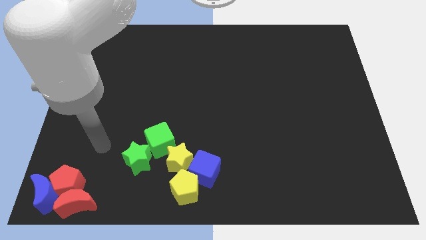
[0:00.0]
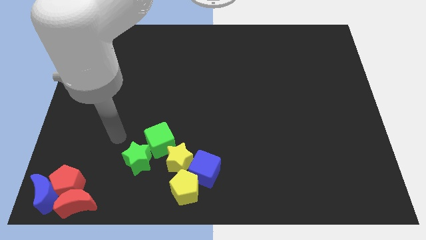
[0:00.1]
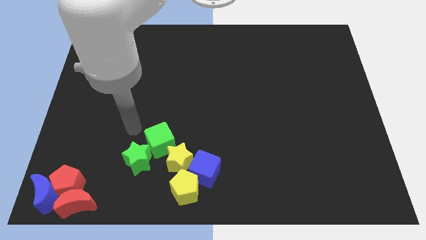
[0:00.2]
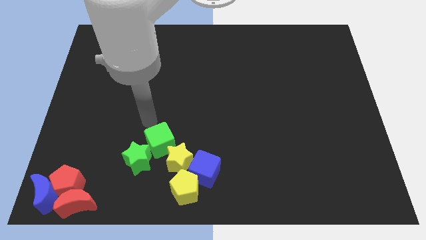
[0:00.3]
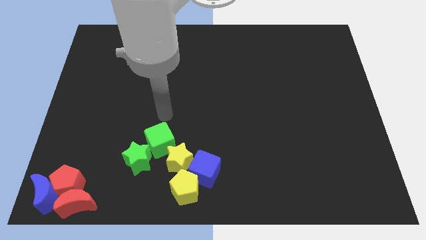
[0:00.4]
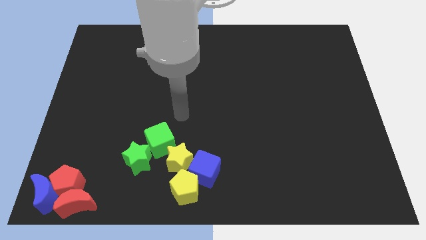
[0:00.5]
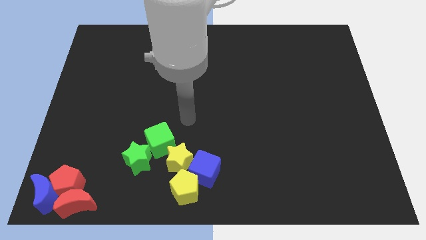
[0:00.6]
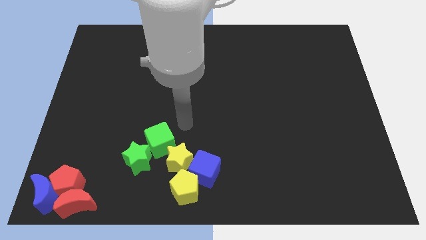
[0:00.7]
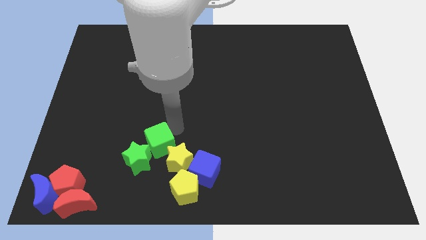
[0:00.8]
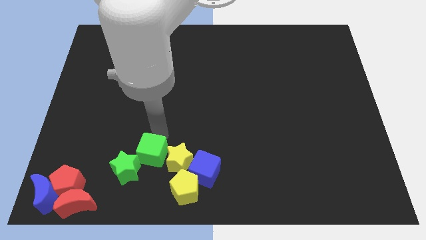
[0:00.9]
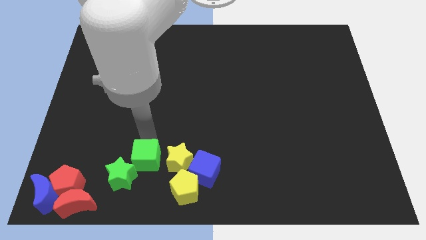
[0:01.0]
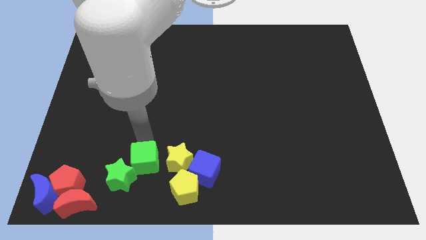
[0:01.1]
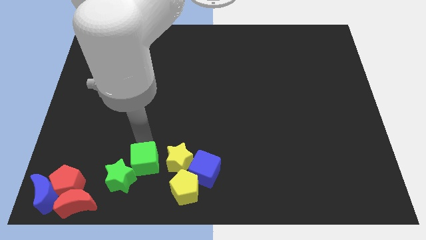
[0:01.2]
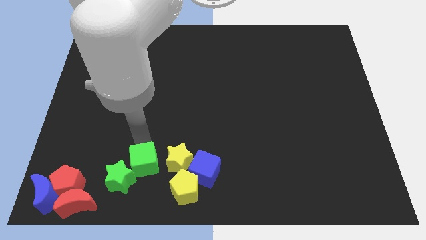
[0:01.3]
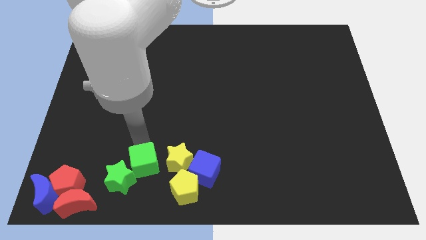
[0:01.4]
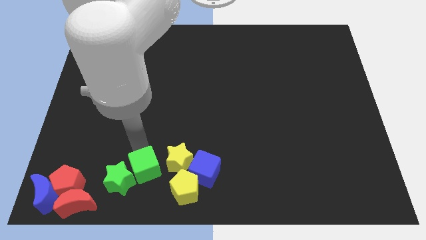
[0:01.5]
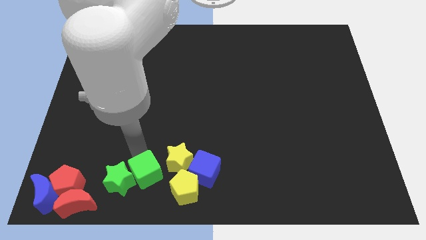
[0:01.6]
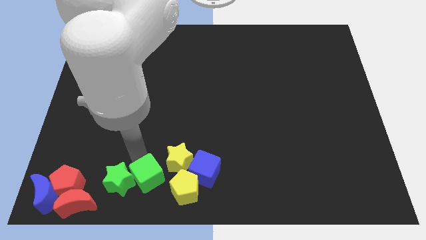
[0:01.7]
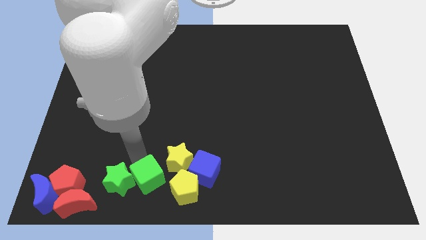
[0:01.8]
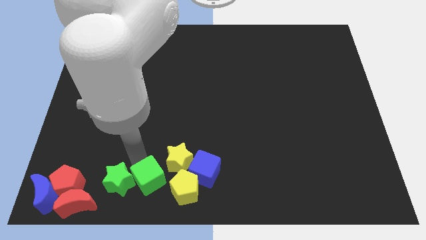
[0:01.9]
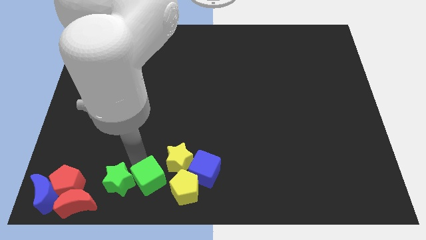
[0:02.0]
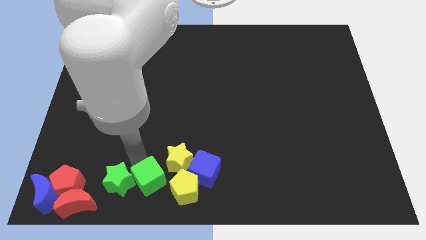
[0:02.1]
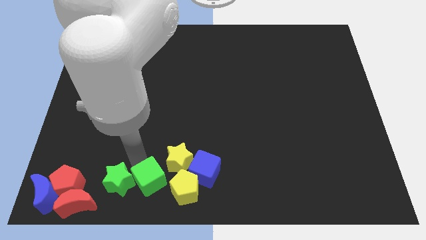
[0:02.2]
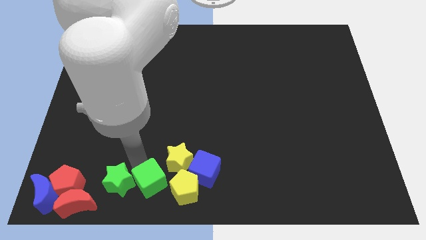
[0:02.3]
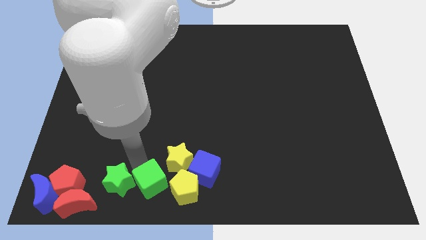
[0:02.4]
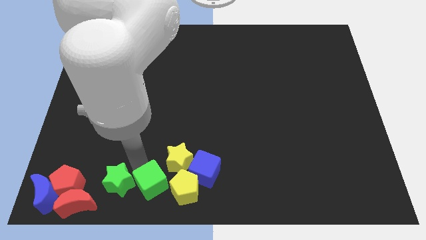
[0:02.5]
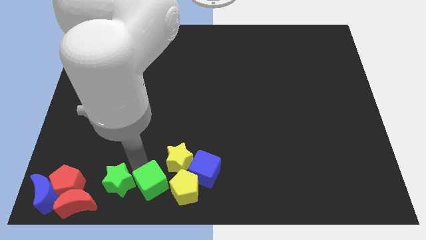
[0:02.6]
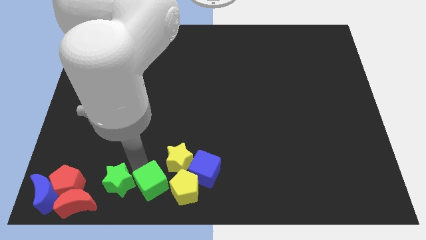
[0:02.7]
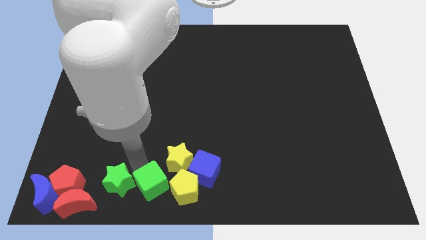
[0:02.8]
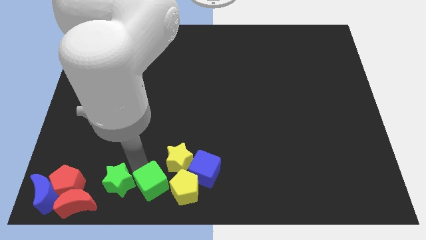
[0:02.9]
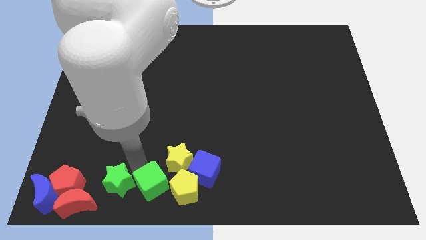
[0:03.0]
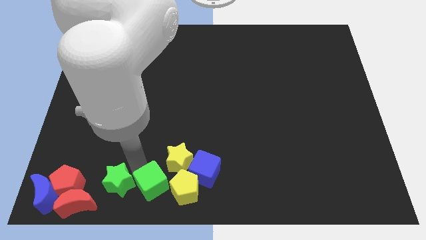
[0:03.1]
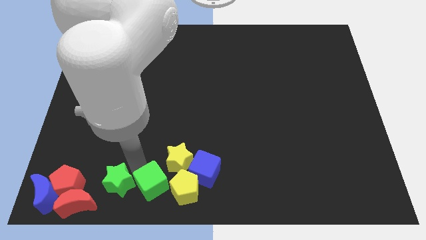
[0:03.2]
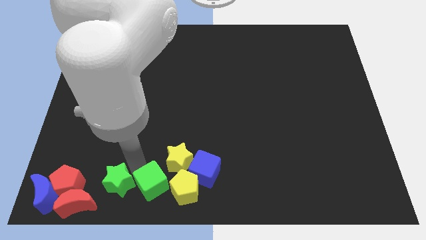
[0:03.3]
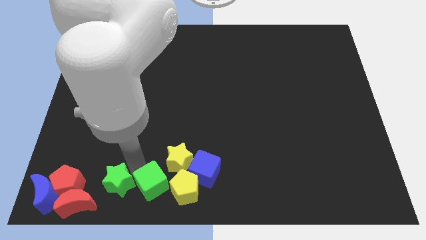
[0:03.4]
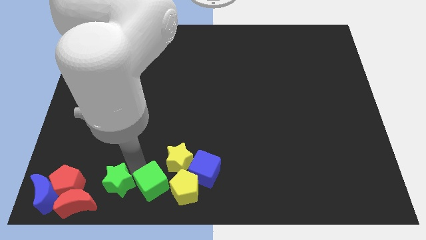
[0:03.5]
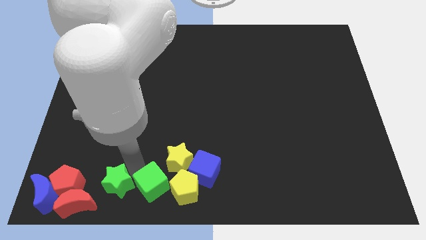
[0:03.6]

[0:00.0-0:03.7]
move the green cube in between yellow pentagon and green star

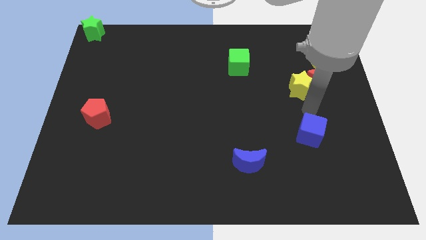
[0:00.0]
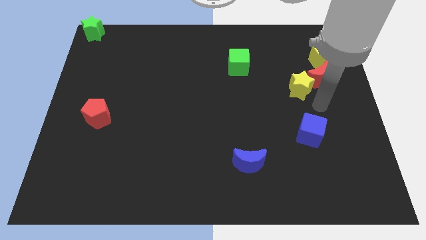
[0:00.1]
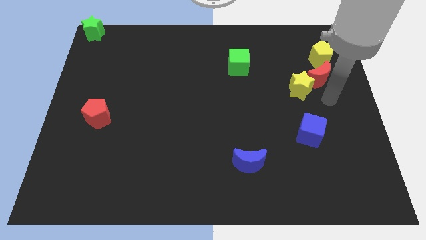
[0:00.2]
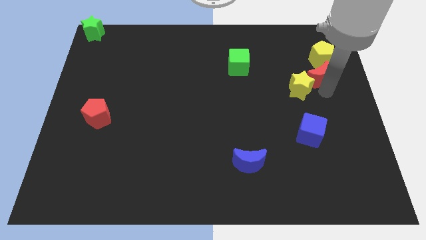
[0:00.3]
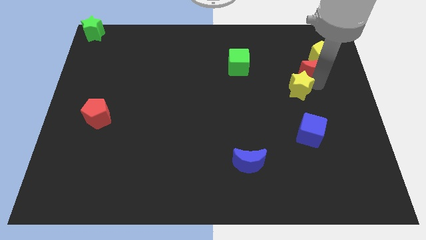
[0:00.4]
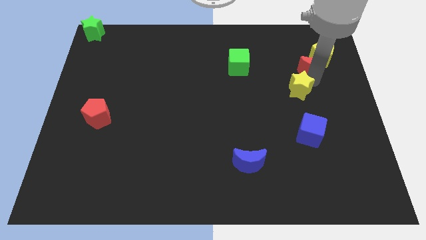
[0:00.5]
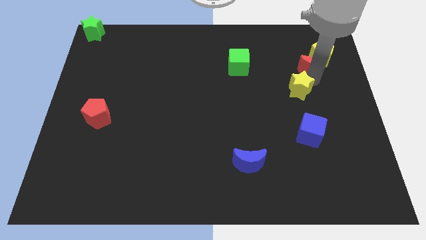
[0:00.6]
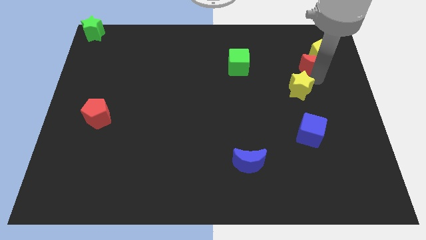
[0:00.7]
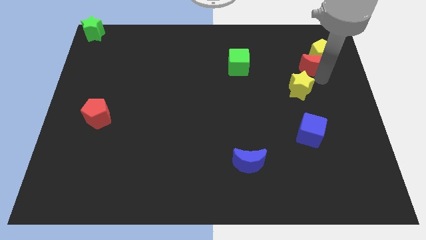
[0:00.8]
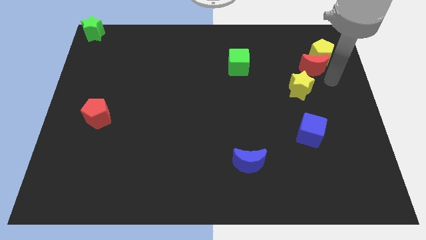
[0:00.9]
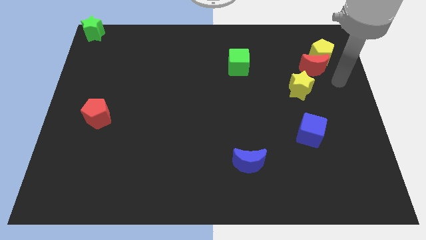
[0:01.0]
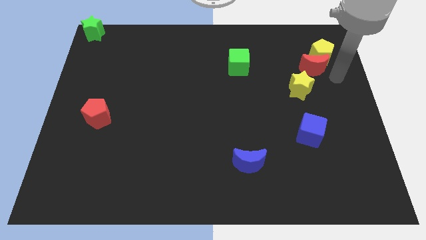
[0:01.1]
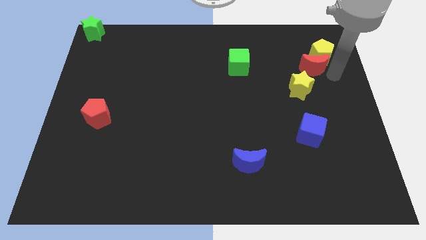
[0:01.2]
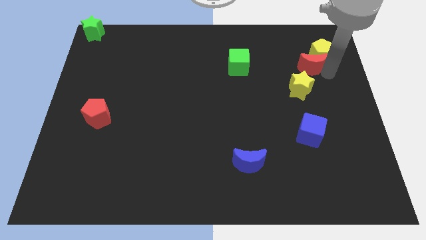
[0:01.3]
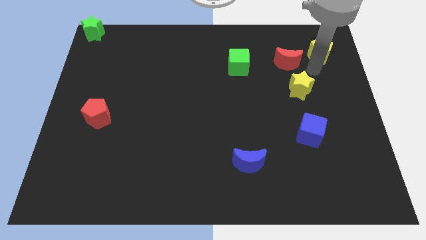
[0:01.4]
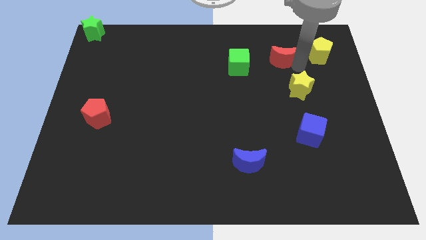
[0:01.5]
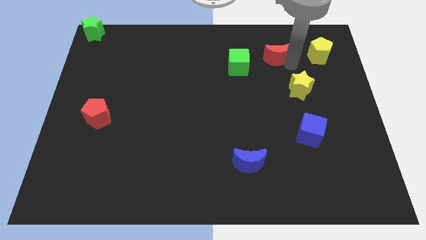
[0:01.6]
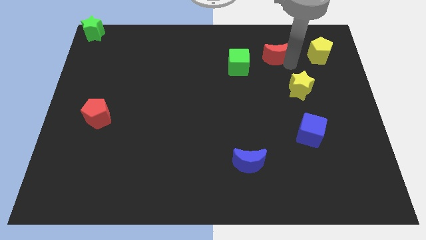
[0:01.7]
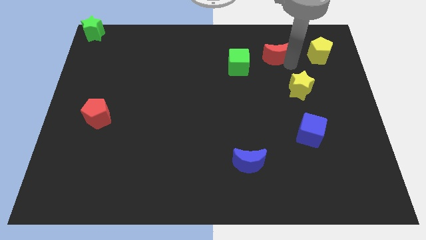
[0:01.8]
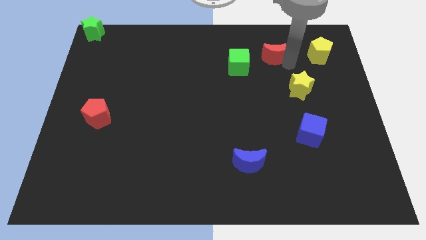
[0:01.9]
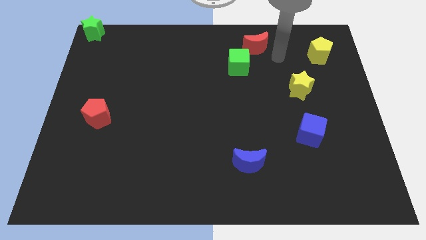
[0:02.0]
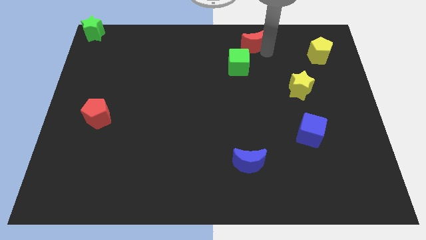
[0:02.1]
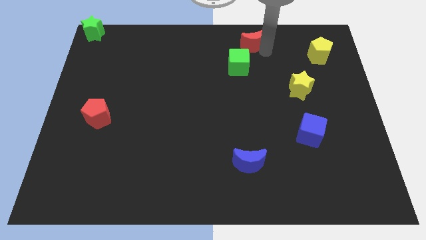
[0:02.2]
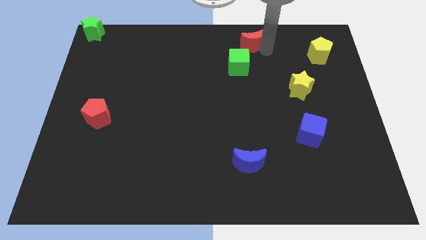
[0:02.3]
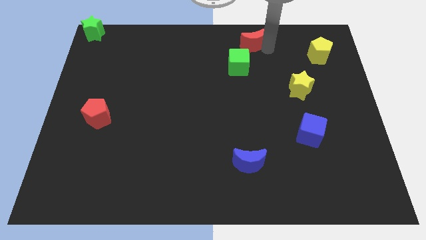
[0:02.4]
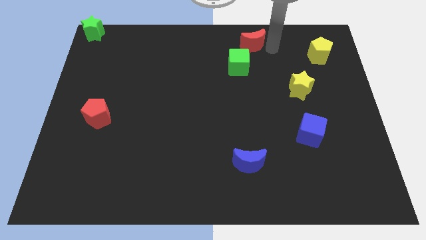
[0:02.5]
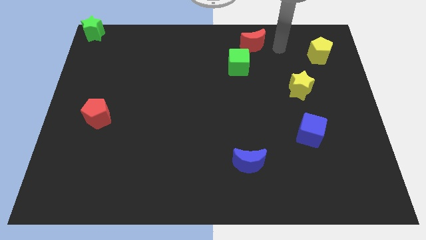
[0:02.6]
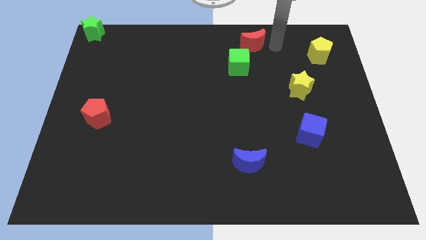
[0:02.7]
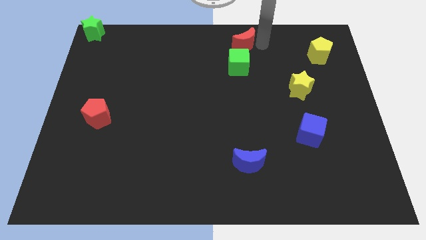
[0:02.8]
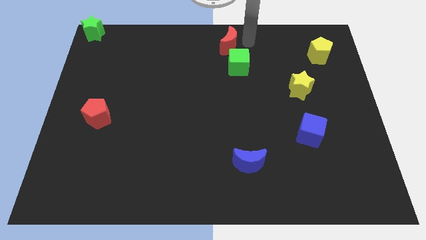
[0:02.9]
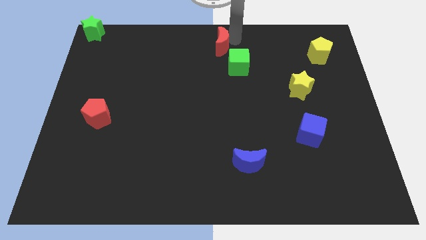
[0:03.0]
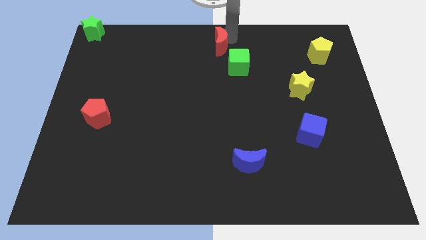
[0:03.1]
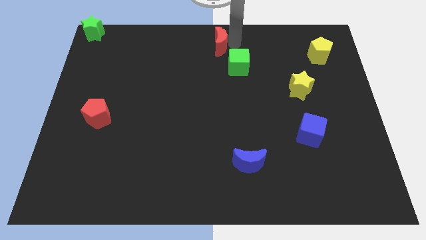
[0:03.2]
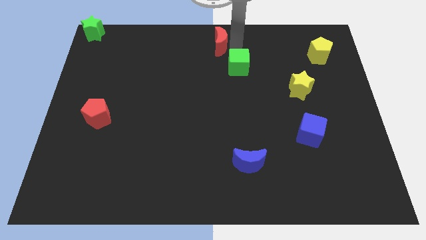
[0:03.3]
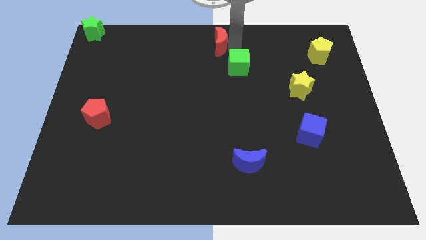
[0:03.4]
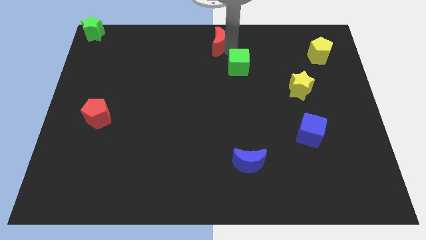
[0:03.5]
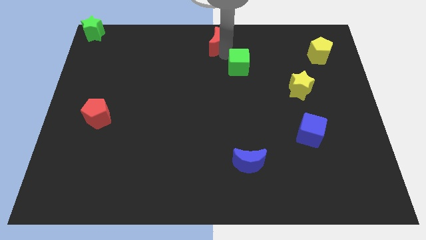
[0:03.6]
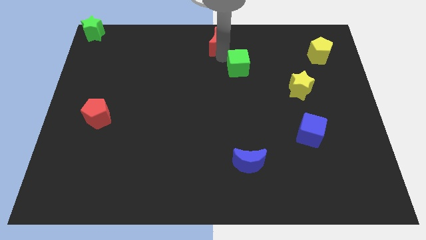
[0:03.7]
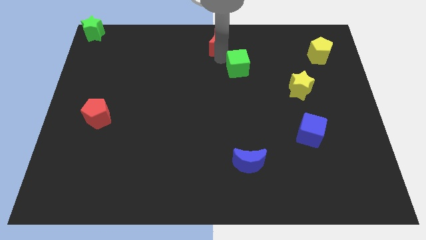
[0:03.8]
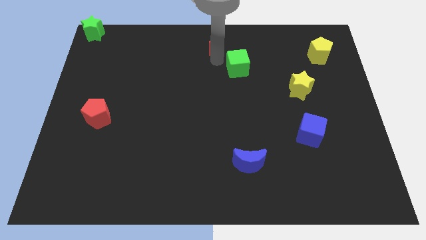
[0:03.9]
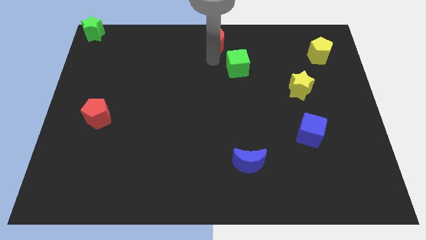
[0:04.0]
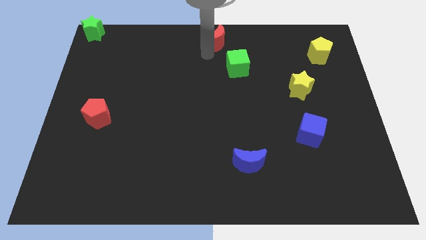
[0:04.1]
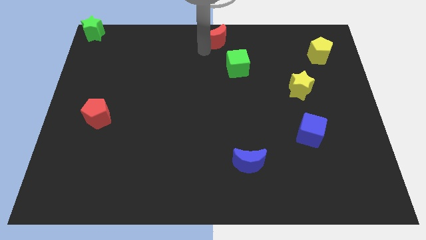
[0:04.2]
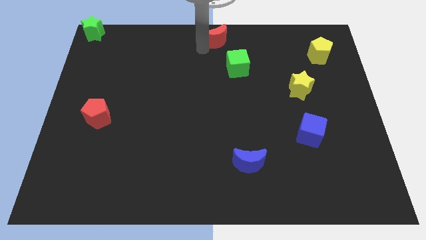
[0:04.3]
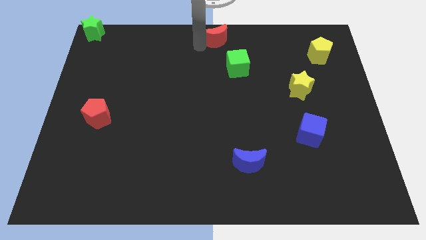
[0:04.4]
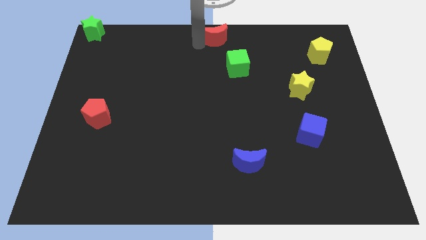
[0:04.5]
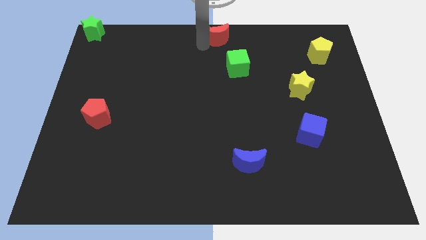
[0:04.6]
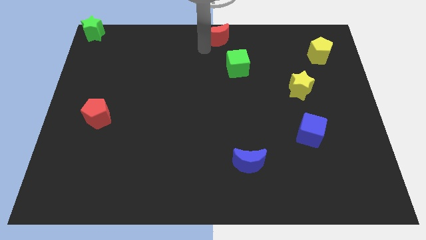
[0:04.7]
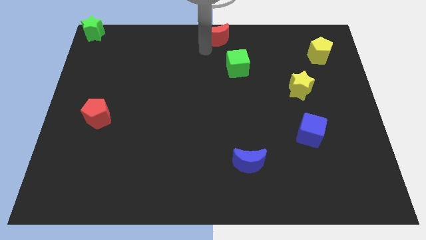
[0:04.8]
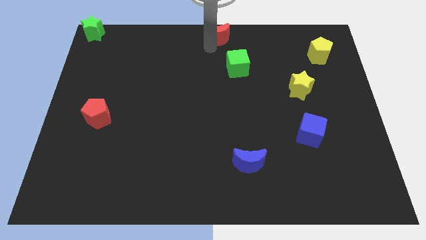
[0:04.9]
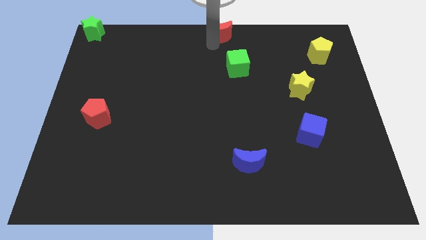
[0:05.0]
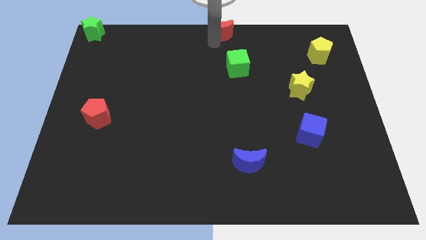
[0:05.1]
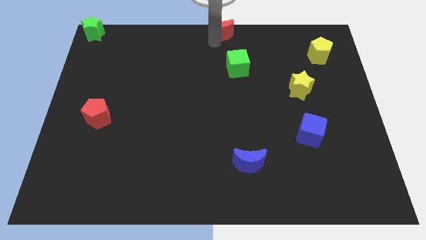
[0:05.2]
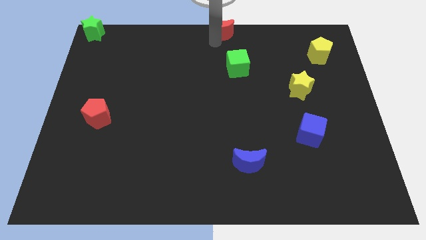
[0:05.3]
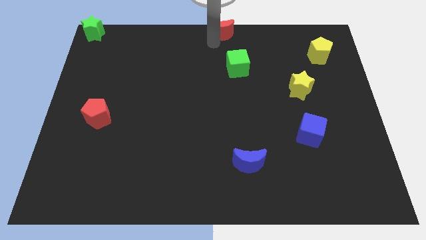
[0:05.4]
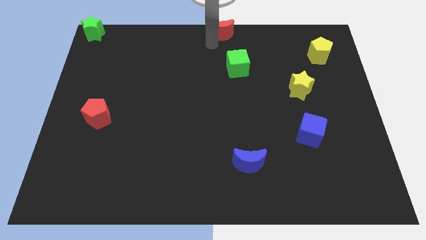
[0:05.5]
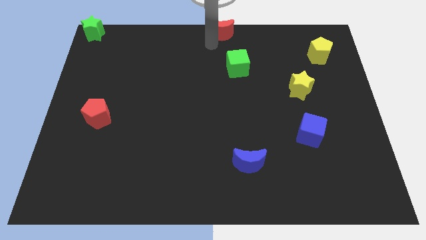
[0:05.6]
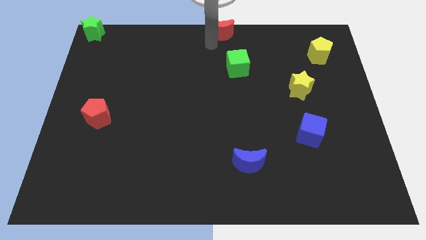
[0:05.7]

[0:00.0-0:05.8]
move the red moon towards the top center
